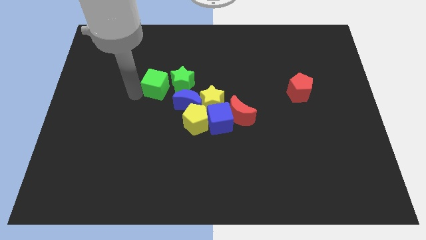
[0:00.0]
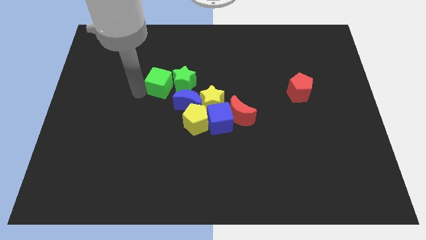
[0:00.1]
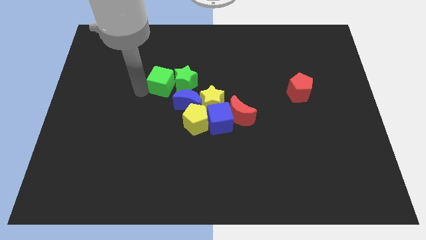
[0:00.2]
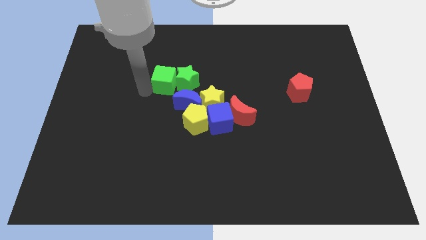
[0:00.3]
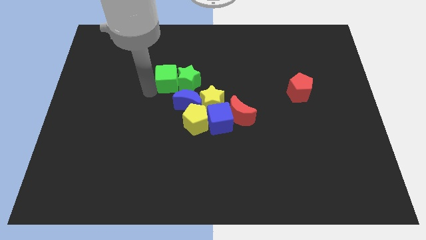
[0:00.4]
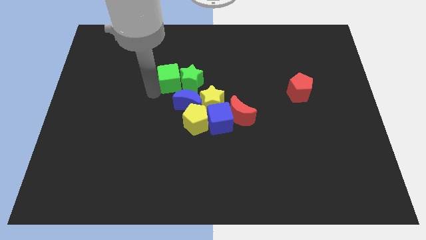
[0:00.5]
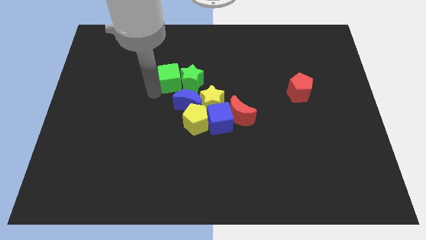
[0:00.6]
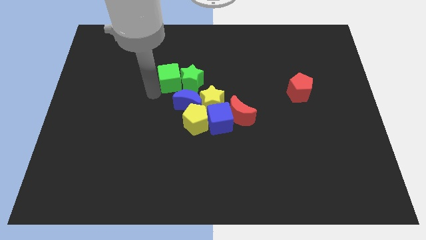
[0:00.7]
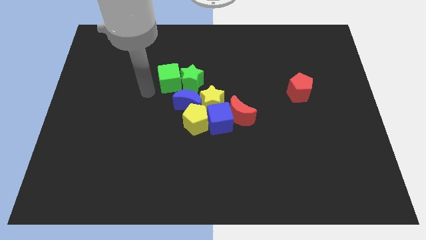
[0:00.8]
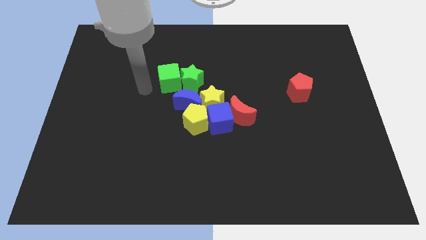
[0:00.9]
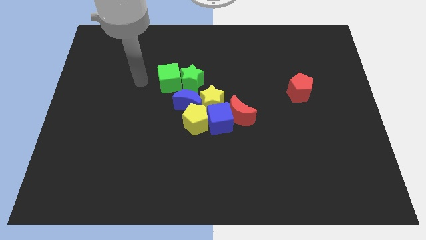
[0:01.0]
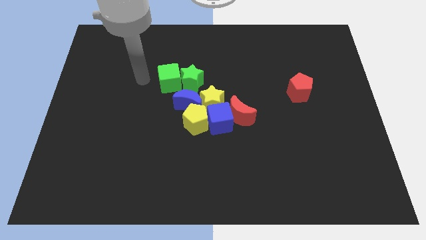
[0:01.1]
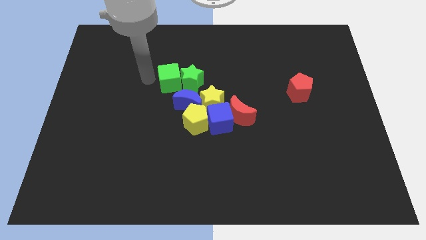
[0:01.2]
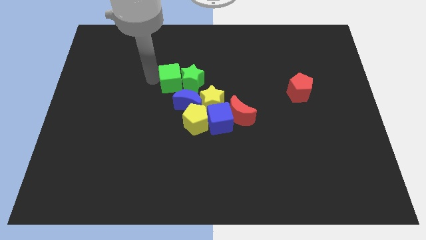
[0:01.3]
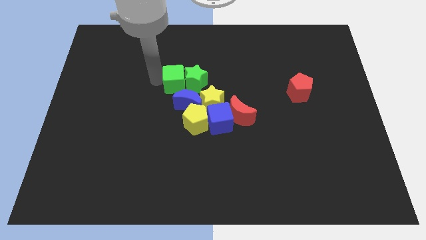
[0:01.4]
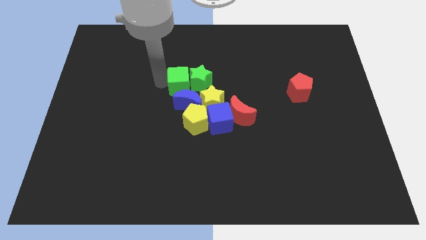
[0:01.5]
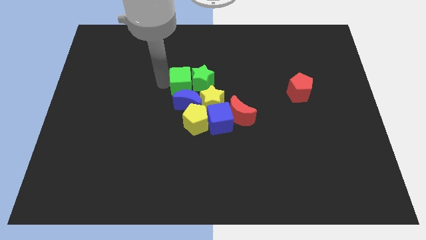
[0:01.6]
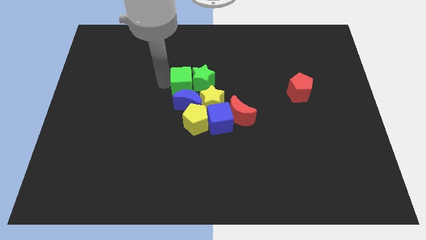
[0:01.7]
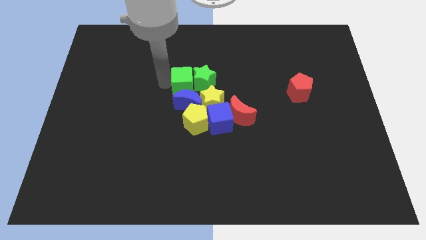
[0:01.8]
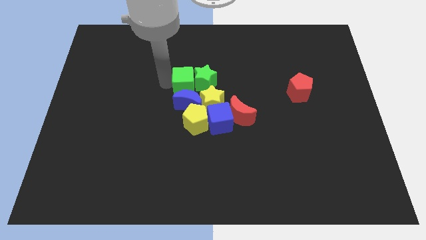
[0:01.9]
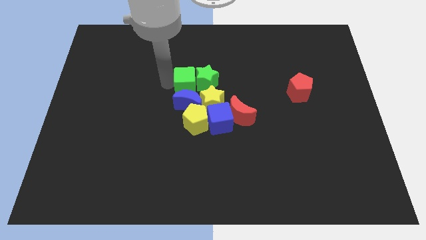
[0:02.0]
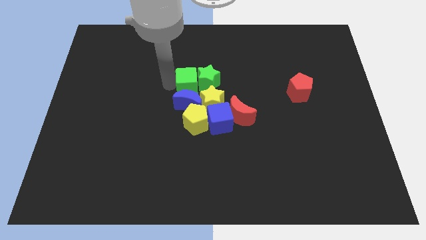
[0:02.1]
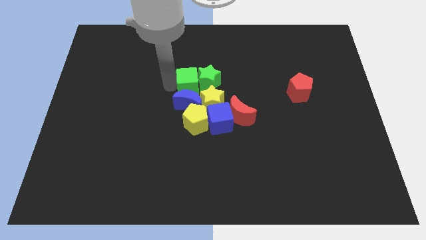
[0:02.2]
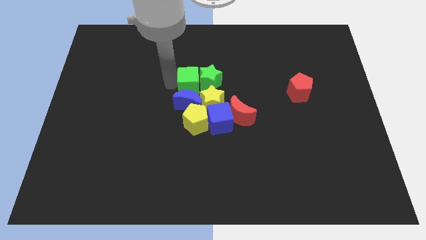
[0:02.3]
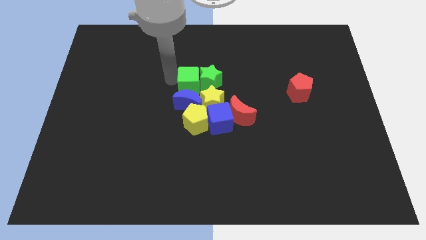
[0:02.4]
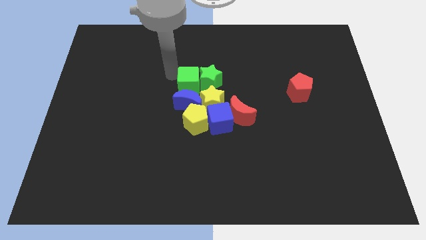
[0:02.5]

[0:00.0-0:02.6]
place the green blocks into the group of blocks

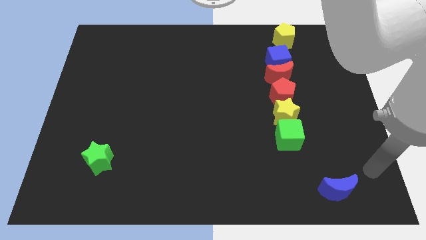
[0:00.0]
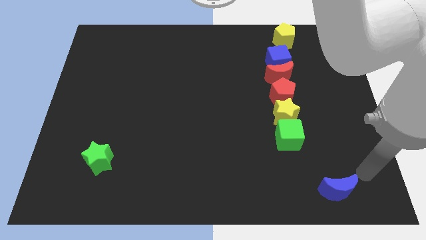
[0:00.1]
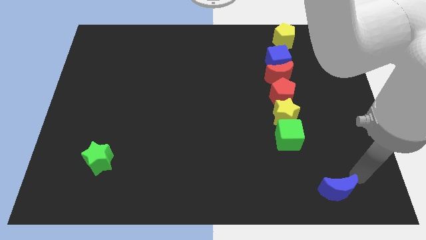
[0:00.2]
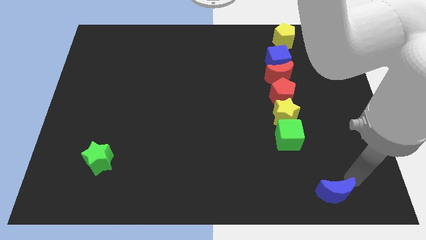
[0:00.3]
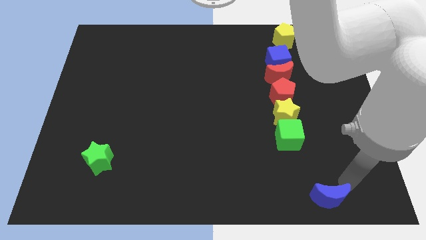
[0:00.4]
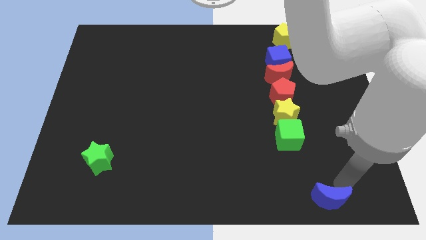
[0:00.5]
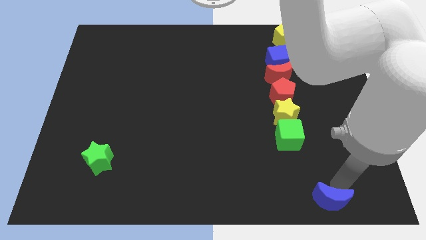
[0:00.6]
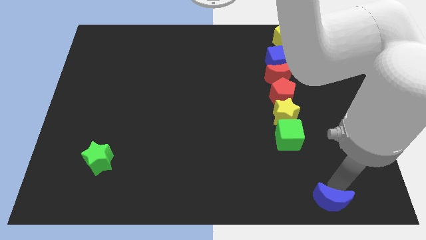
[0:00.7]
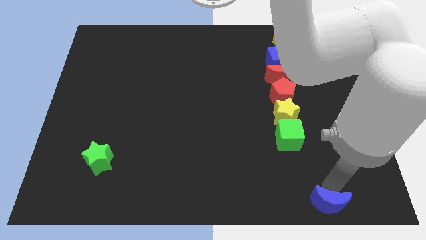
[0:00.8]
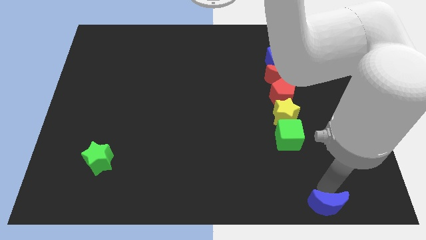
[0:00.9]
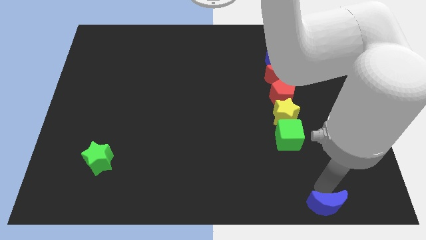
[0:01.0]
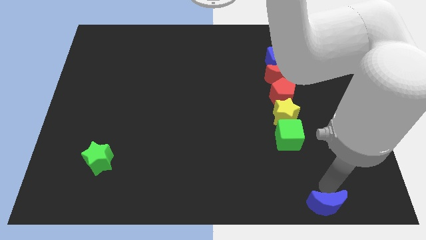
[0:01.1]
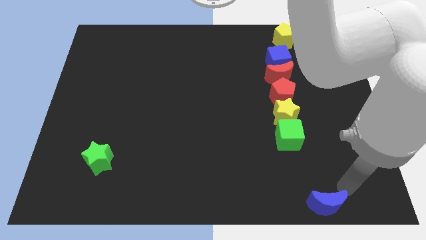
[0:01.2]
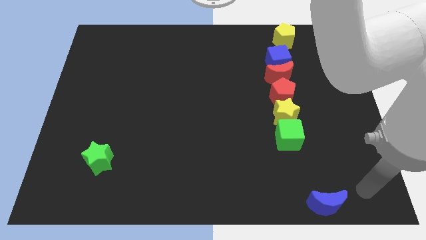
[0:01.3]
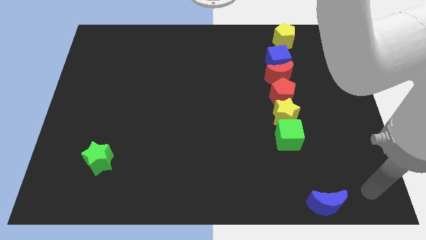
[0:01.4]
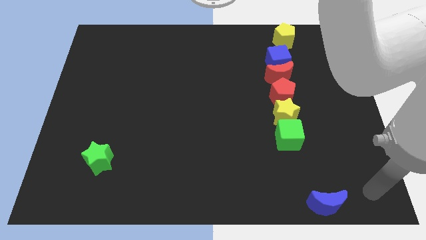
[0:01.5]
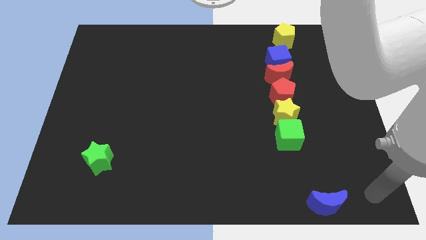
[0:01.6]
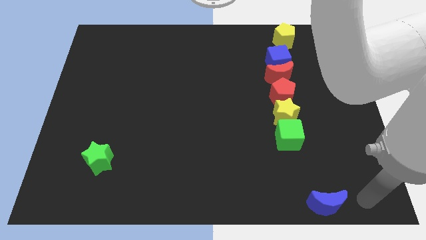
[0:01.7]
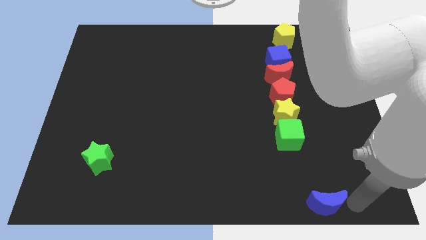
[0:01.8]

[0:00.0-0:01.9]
place the arm right to the blue moon

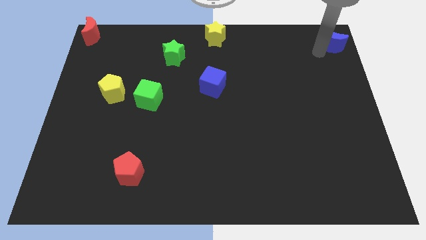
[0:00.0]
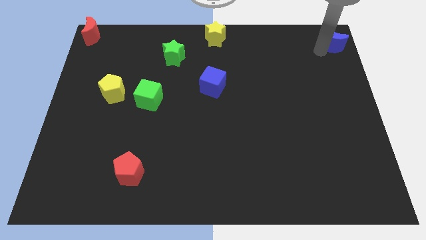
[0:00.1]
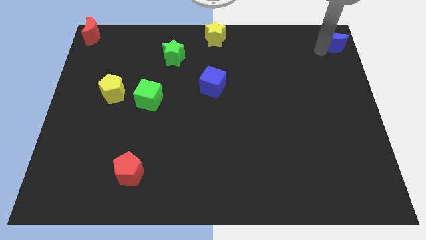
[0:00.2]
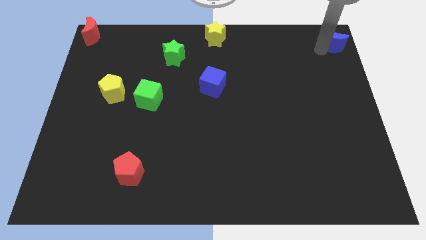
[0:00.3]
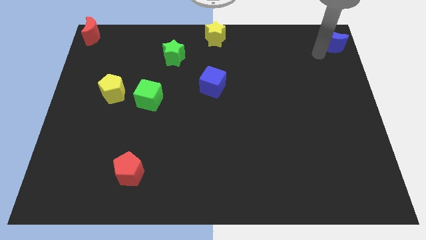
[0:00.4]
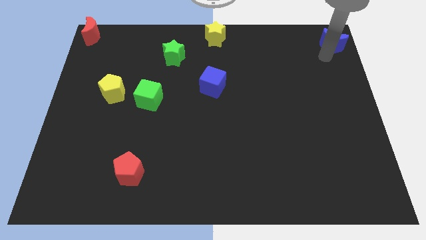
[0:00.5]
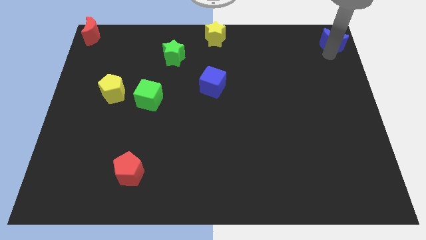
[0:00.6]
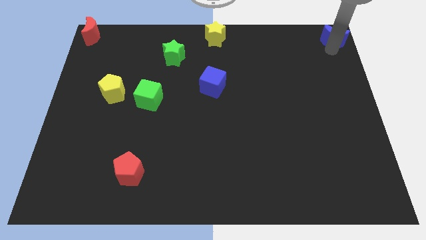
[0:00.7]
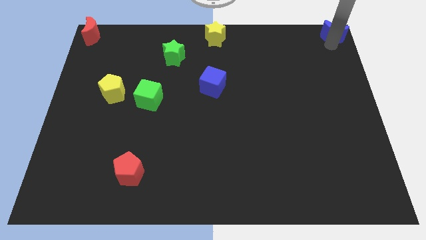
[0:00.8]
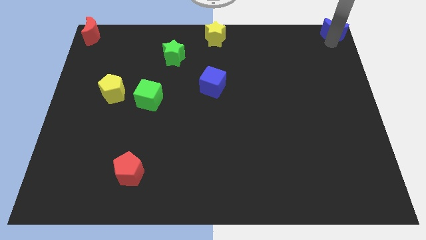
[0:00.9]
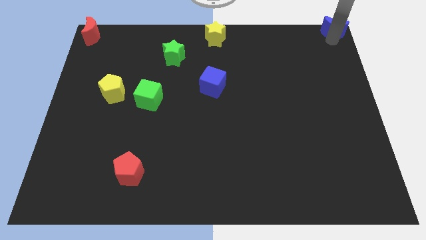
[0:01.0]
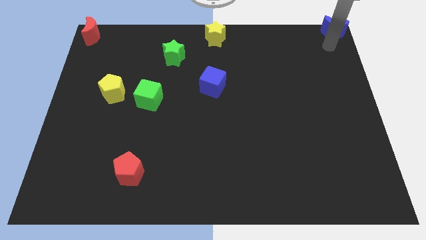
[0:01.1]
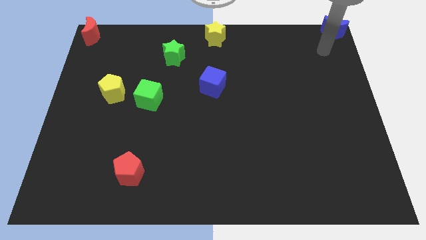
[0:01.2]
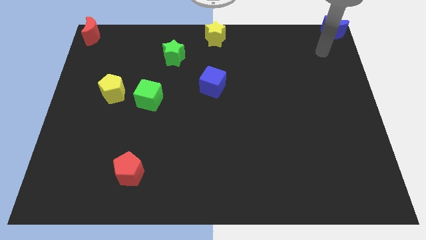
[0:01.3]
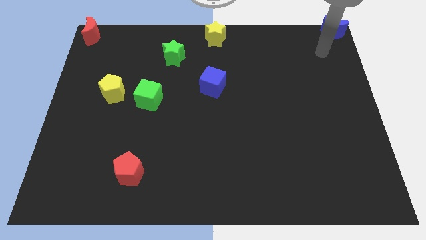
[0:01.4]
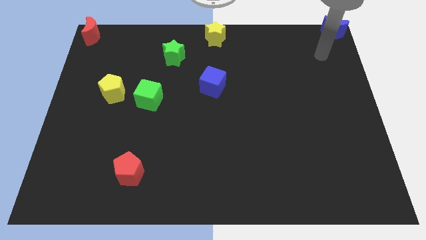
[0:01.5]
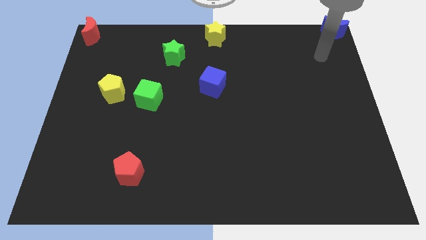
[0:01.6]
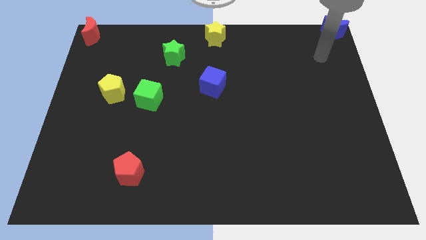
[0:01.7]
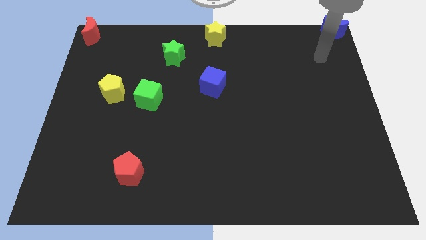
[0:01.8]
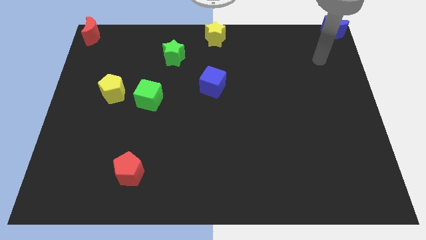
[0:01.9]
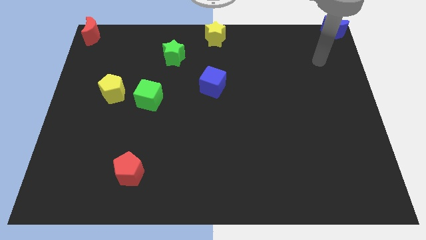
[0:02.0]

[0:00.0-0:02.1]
place the blue moon to the top right corner

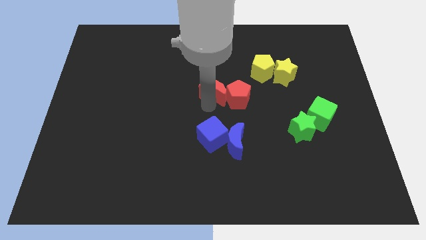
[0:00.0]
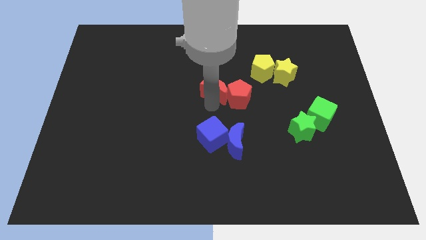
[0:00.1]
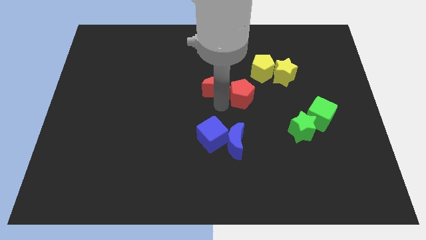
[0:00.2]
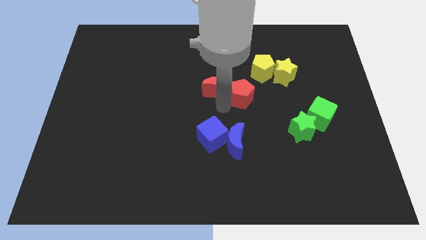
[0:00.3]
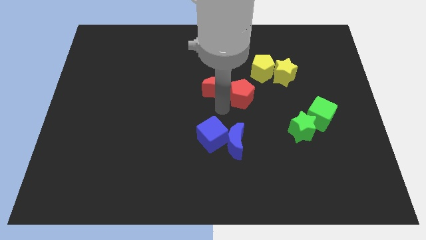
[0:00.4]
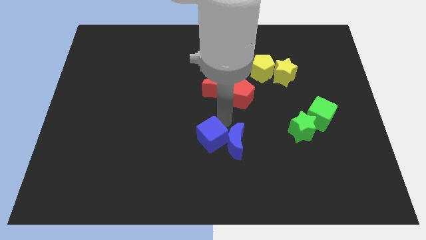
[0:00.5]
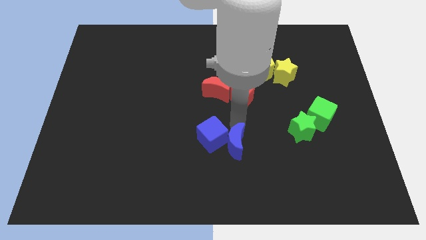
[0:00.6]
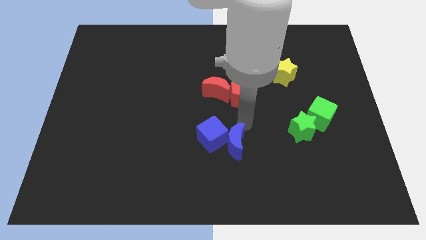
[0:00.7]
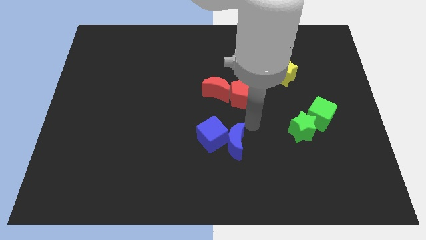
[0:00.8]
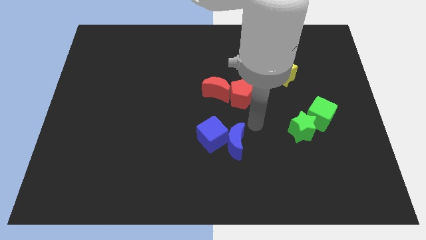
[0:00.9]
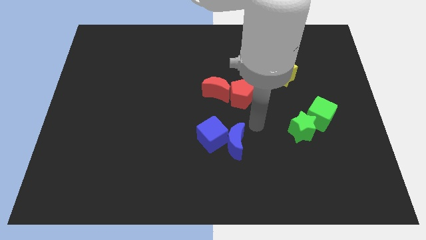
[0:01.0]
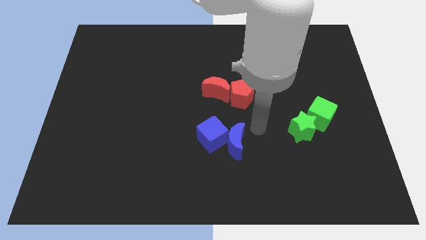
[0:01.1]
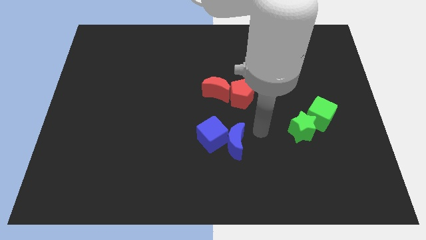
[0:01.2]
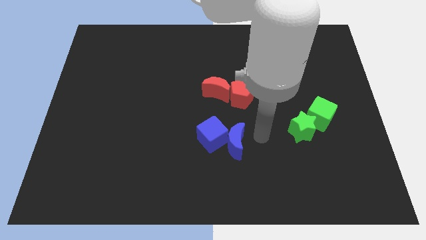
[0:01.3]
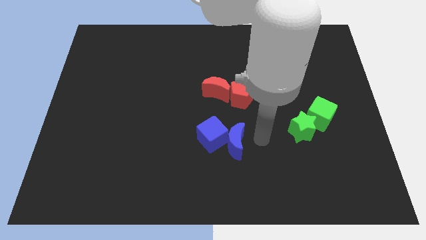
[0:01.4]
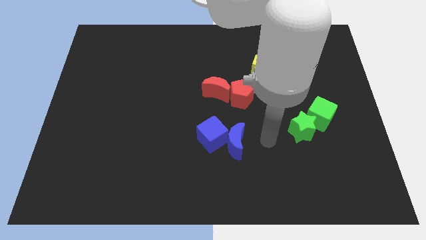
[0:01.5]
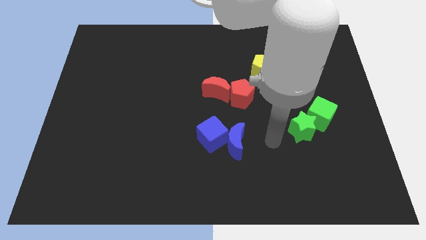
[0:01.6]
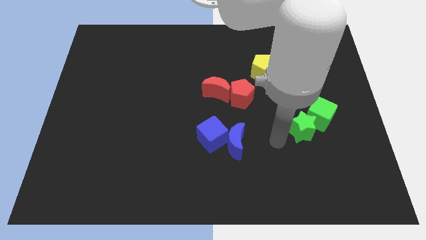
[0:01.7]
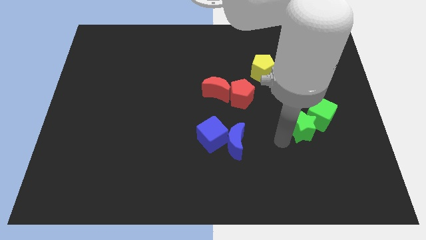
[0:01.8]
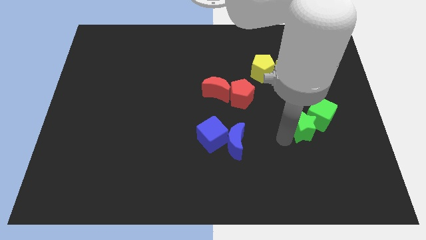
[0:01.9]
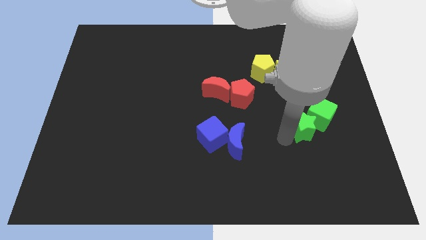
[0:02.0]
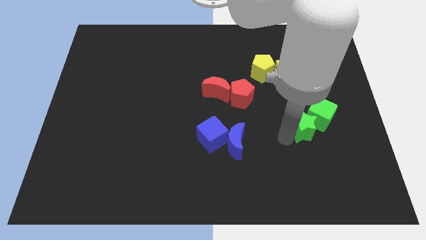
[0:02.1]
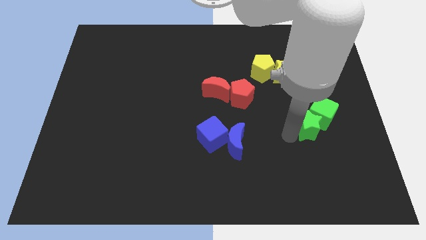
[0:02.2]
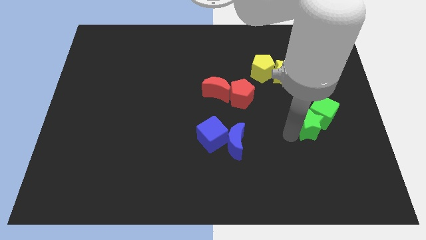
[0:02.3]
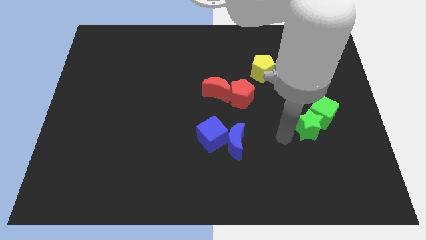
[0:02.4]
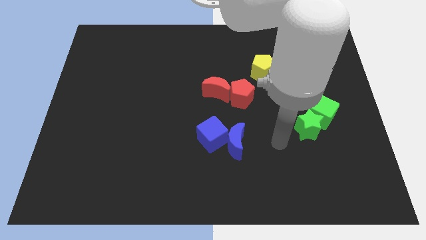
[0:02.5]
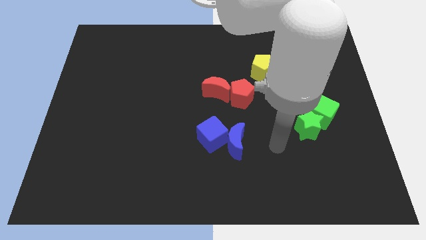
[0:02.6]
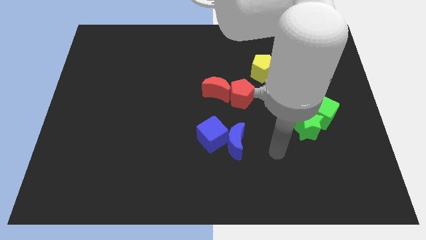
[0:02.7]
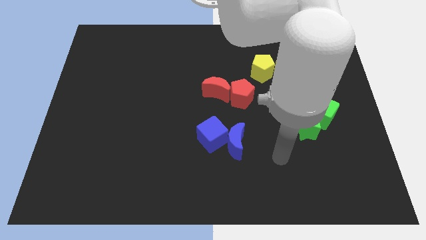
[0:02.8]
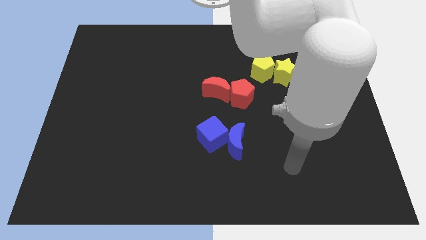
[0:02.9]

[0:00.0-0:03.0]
push green star in to green cube
